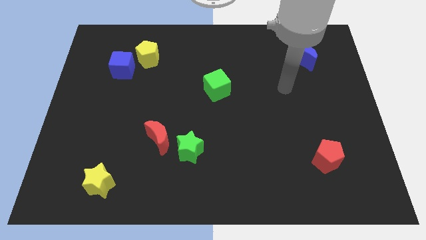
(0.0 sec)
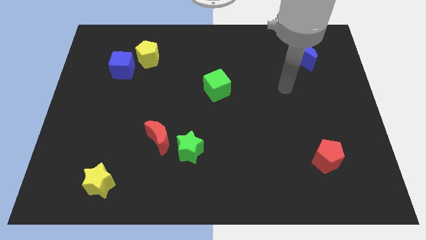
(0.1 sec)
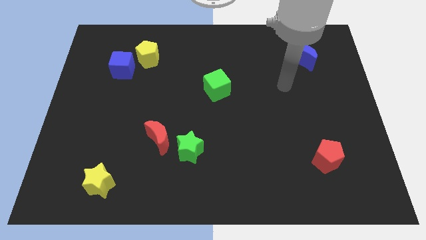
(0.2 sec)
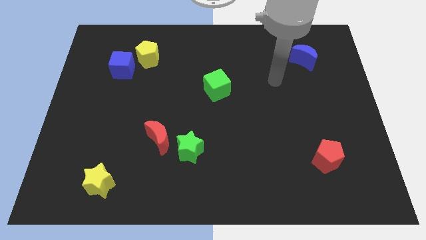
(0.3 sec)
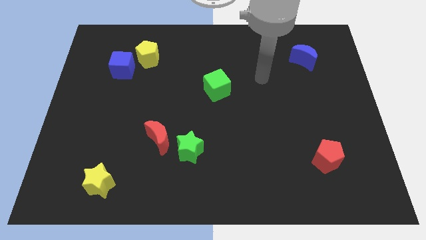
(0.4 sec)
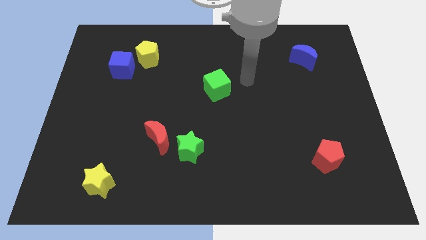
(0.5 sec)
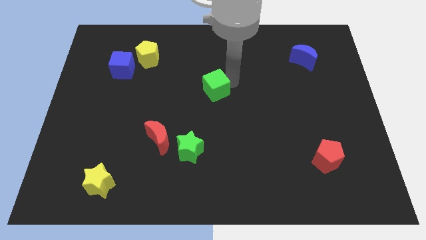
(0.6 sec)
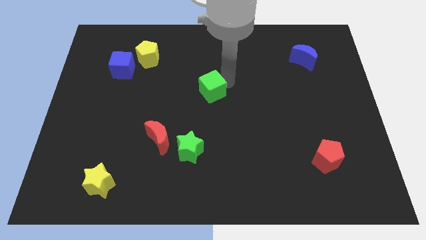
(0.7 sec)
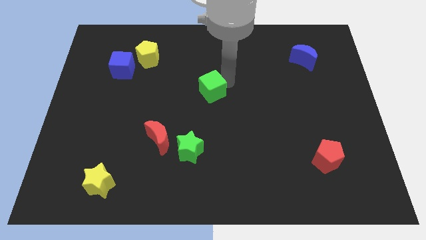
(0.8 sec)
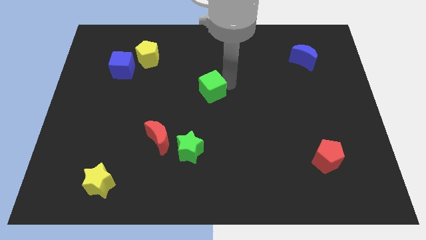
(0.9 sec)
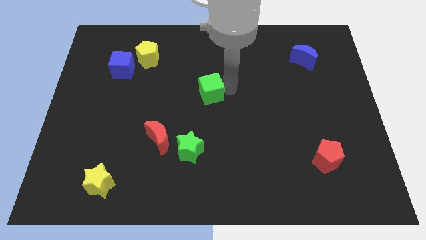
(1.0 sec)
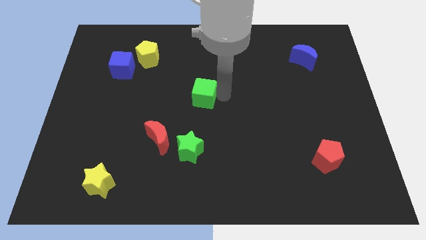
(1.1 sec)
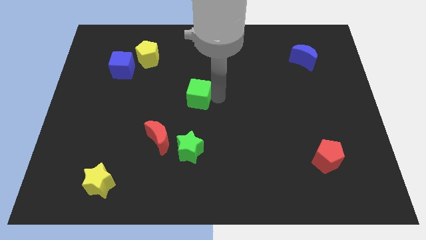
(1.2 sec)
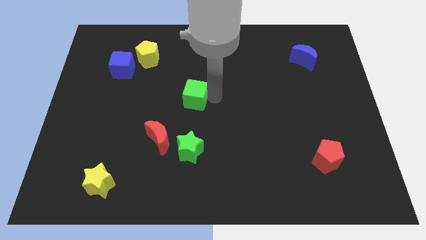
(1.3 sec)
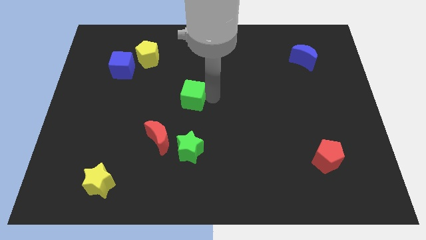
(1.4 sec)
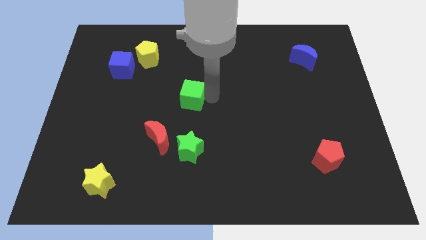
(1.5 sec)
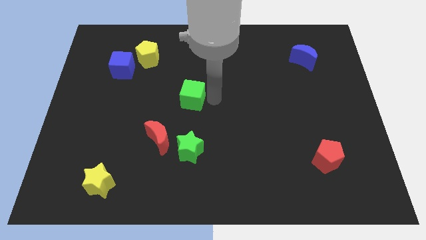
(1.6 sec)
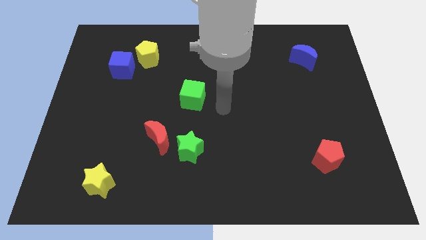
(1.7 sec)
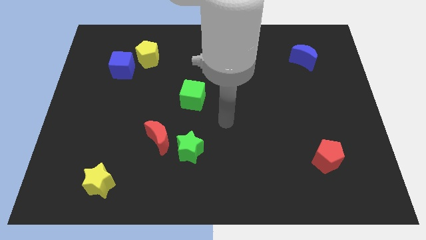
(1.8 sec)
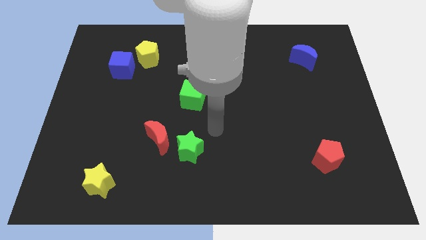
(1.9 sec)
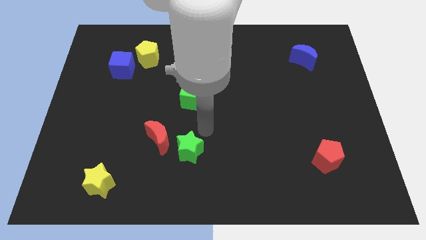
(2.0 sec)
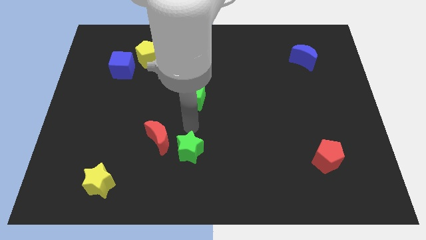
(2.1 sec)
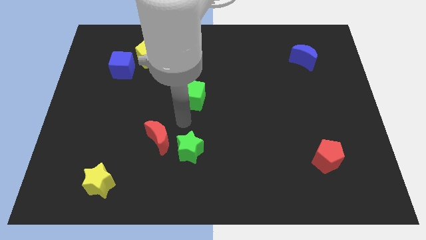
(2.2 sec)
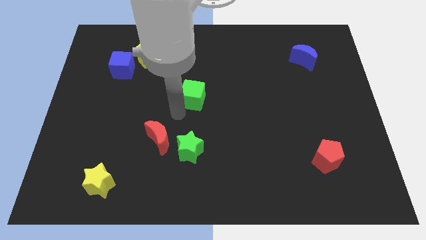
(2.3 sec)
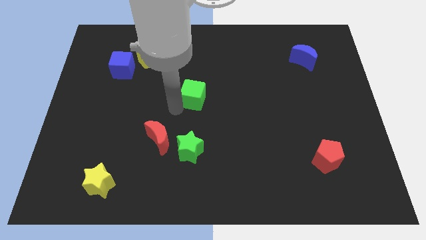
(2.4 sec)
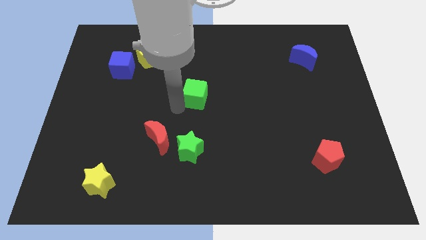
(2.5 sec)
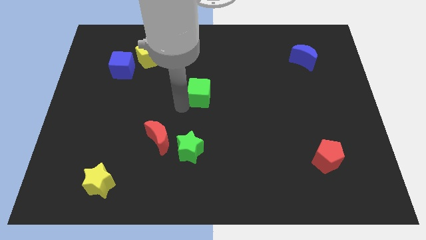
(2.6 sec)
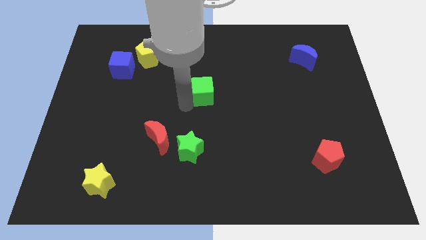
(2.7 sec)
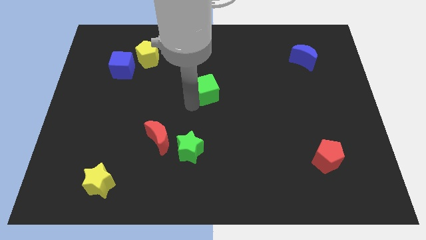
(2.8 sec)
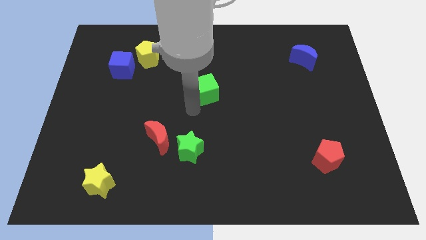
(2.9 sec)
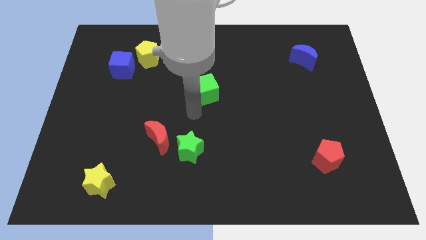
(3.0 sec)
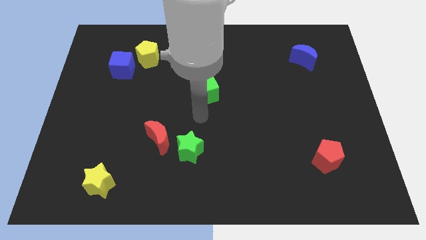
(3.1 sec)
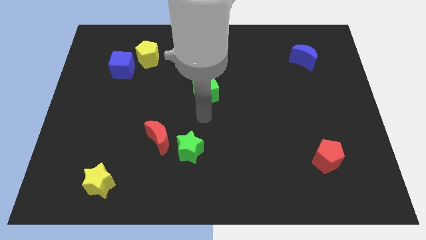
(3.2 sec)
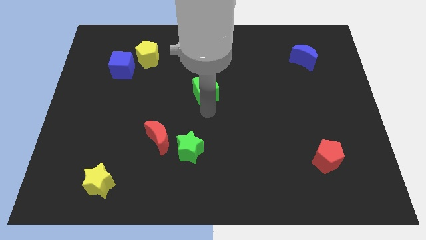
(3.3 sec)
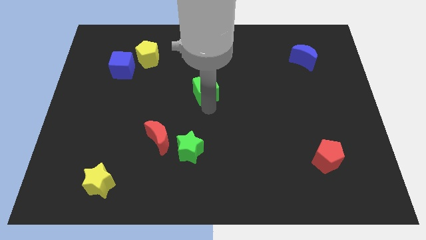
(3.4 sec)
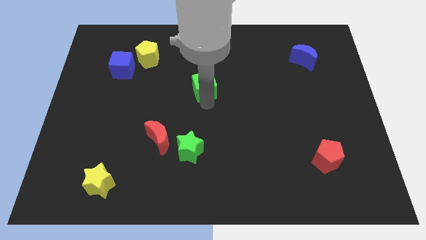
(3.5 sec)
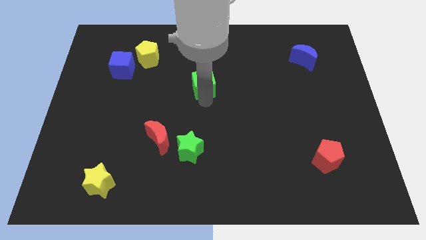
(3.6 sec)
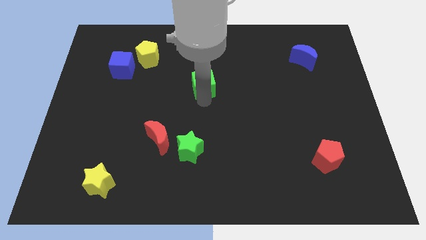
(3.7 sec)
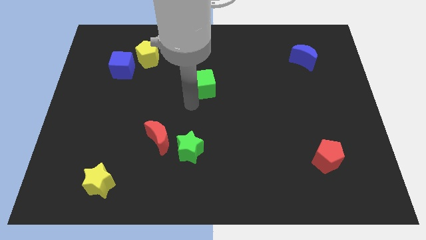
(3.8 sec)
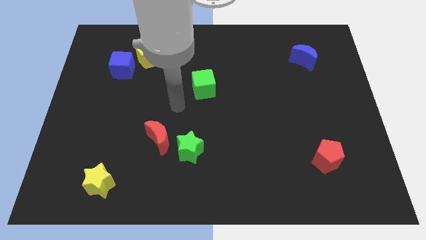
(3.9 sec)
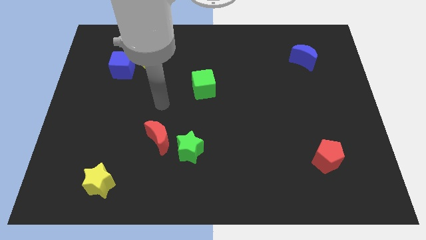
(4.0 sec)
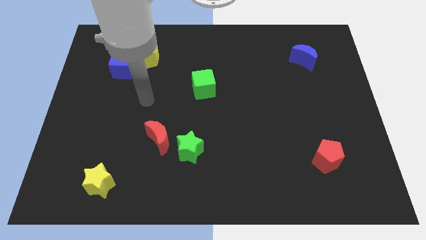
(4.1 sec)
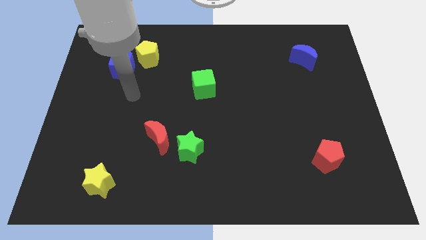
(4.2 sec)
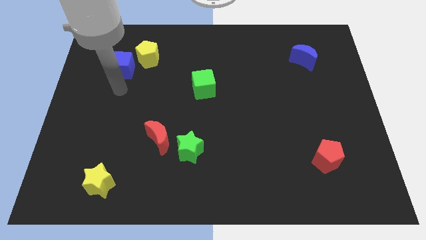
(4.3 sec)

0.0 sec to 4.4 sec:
place the green cube at the center of the board

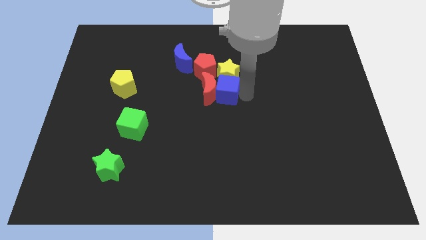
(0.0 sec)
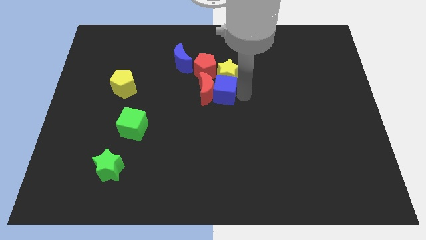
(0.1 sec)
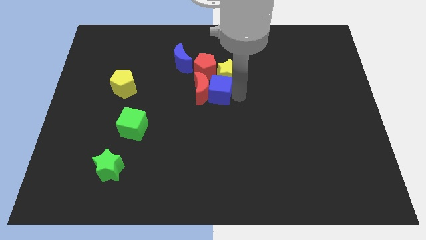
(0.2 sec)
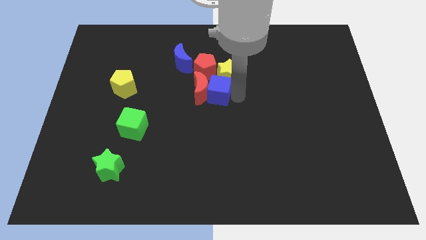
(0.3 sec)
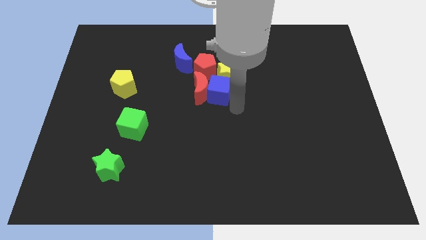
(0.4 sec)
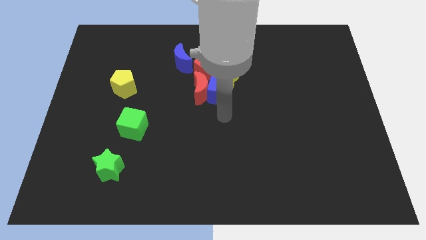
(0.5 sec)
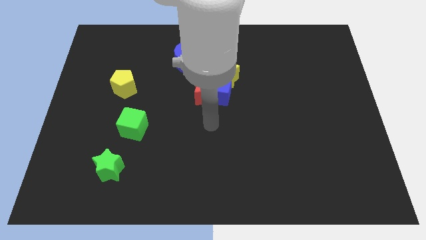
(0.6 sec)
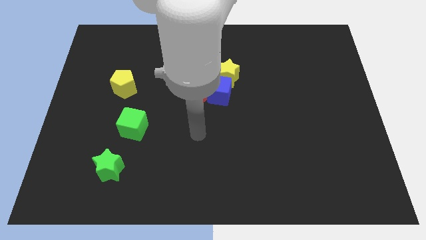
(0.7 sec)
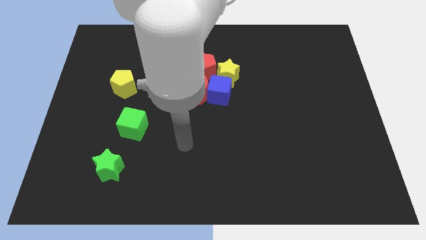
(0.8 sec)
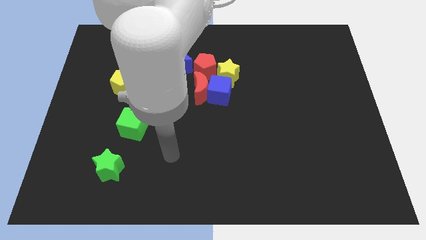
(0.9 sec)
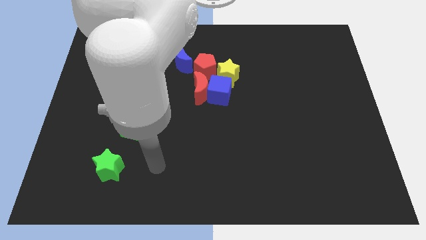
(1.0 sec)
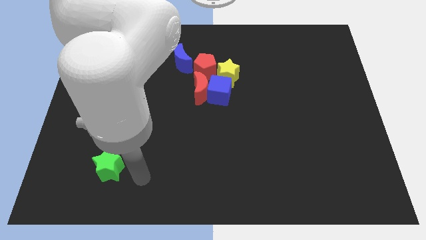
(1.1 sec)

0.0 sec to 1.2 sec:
push the blue cube to the right of the red crescent

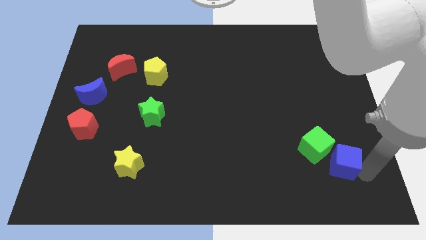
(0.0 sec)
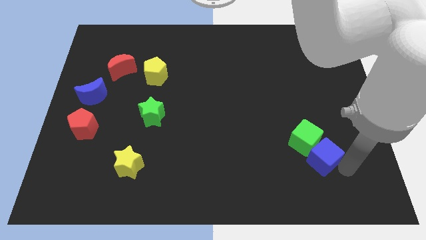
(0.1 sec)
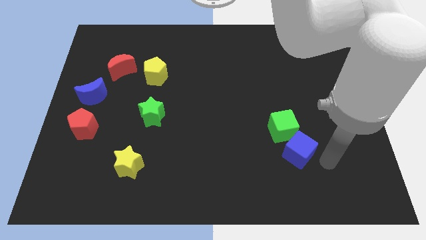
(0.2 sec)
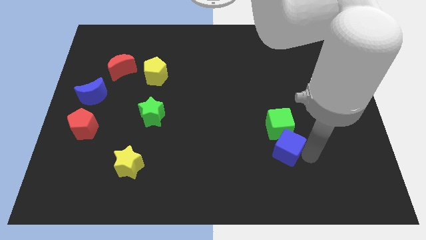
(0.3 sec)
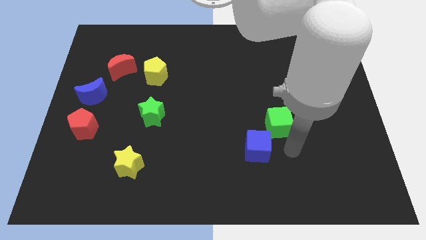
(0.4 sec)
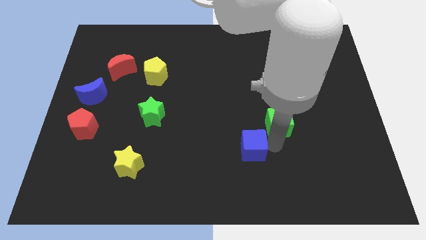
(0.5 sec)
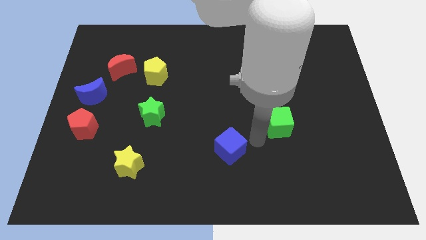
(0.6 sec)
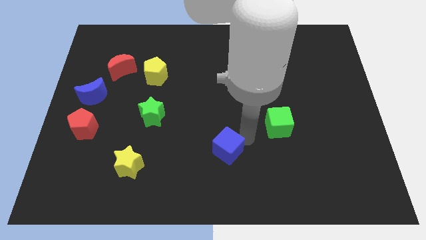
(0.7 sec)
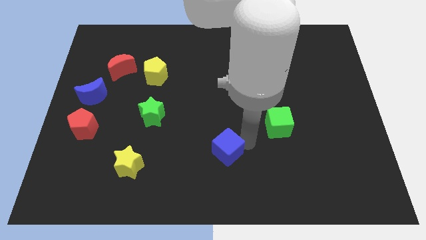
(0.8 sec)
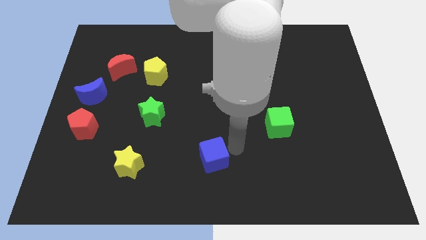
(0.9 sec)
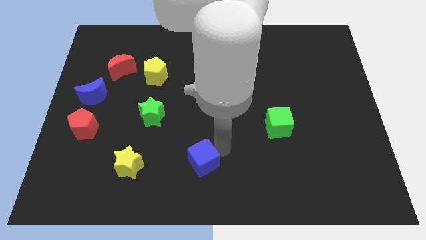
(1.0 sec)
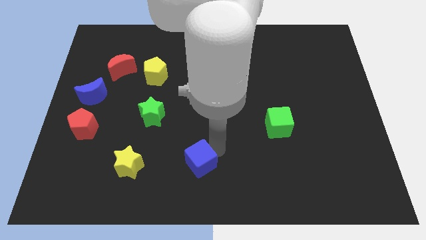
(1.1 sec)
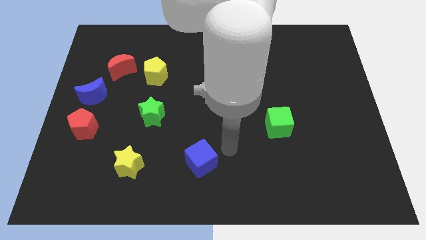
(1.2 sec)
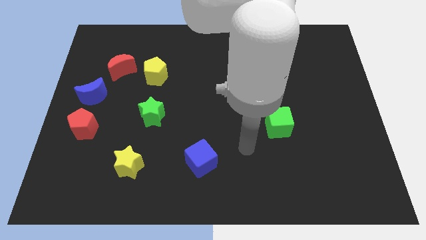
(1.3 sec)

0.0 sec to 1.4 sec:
push the cubes towards the left side of the board

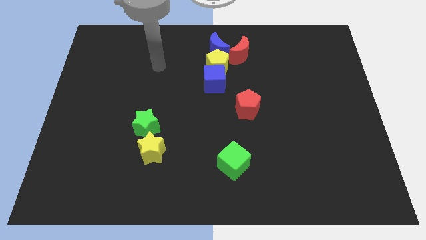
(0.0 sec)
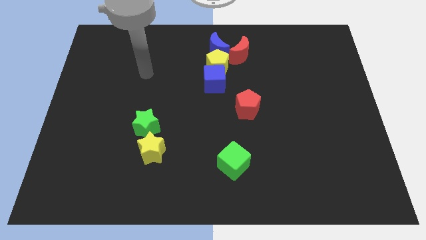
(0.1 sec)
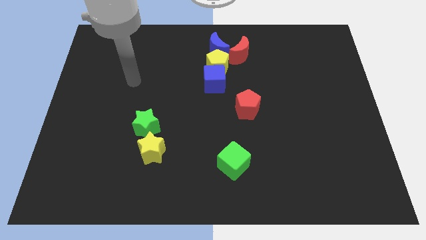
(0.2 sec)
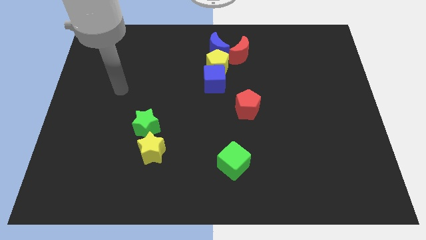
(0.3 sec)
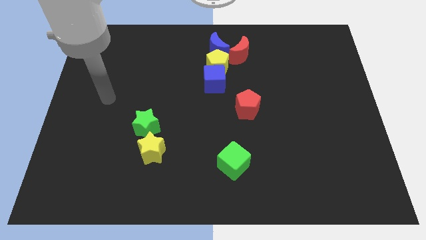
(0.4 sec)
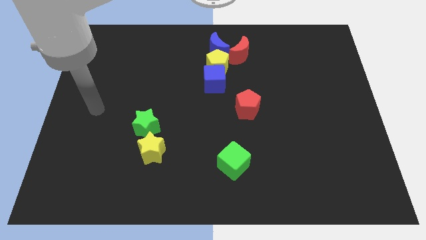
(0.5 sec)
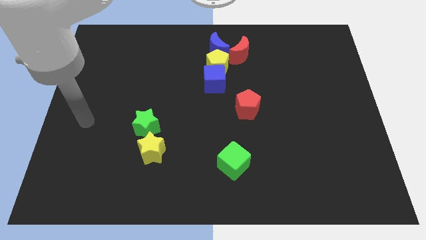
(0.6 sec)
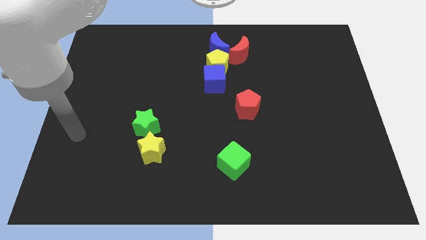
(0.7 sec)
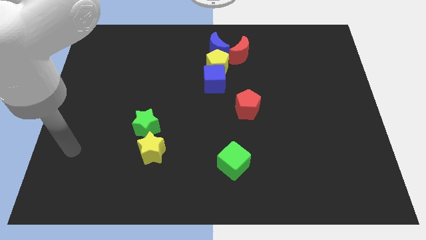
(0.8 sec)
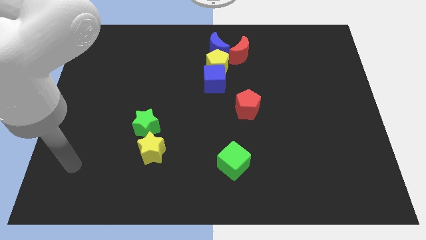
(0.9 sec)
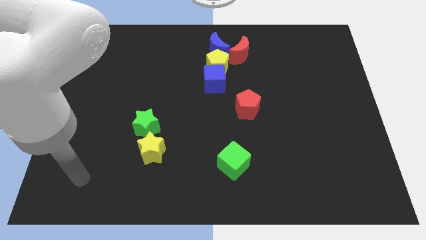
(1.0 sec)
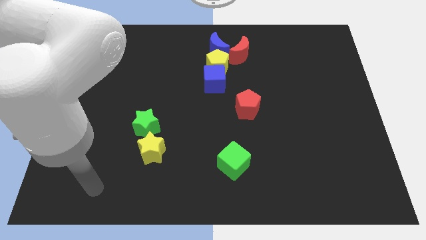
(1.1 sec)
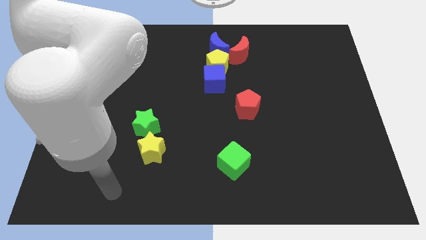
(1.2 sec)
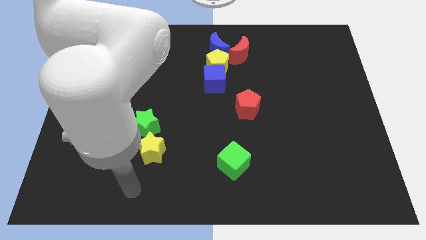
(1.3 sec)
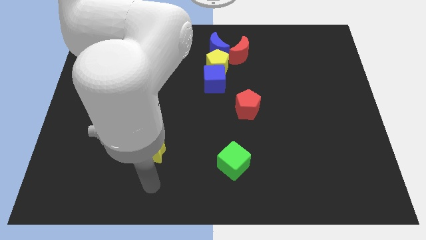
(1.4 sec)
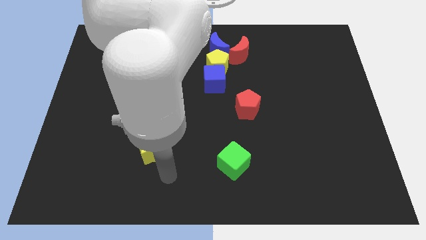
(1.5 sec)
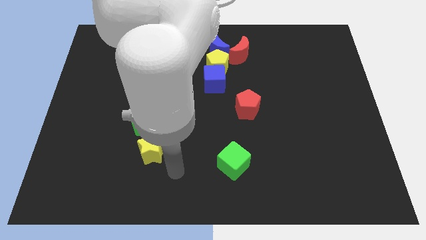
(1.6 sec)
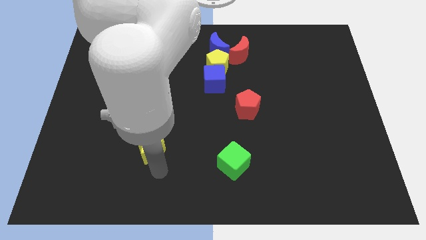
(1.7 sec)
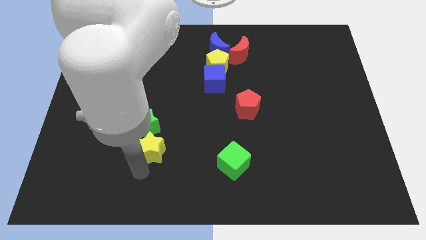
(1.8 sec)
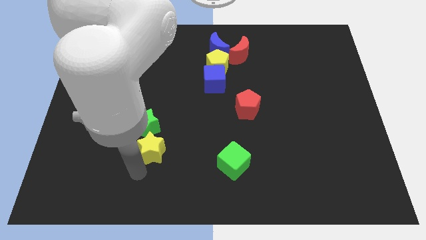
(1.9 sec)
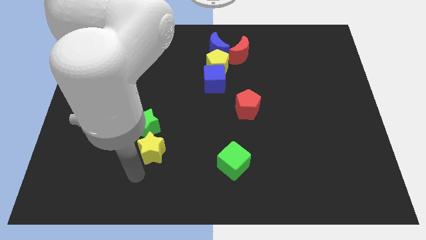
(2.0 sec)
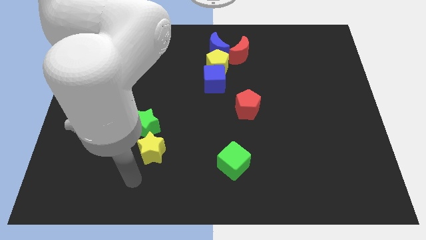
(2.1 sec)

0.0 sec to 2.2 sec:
point your arm below yellow star
